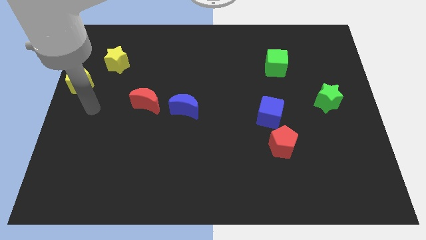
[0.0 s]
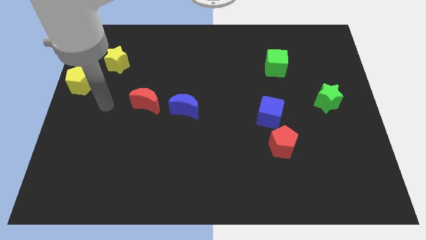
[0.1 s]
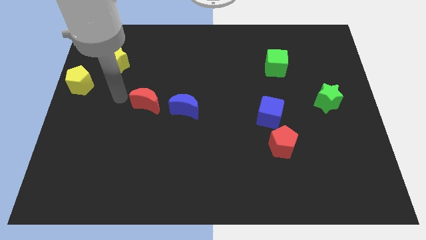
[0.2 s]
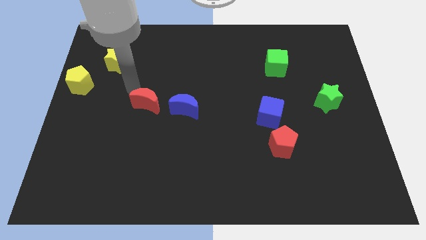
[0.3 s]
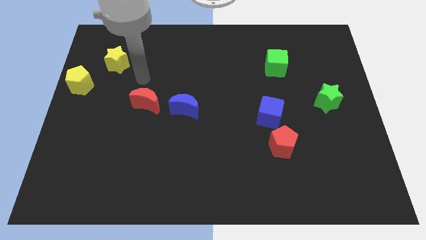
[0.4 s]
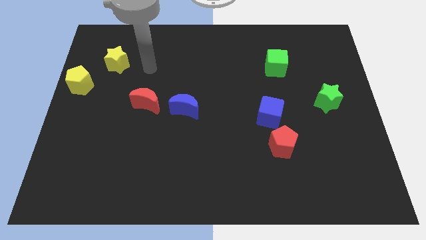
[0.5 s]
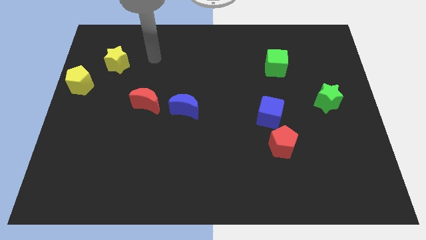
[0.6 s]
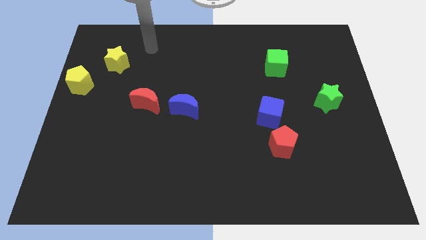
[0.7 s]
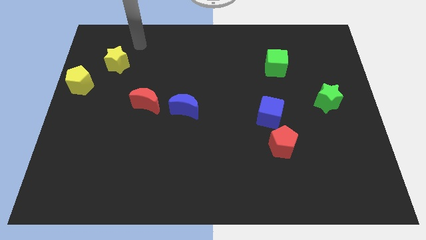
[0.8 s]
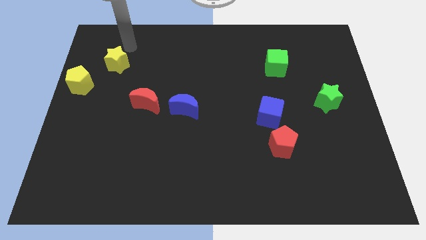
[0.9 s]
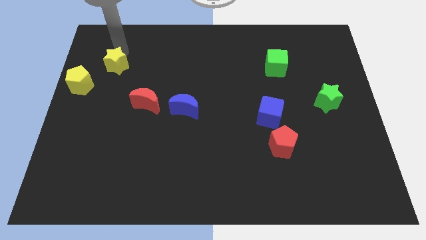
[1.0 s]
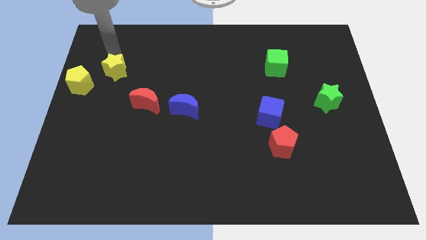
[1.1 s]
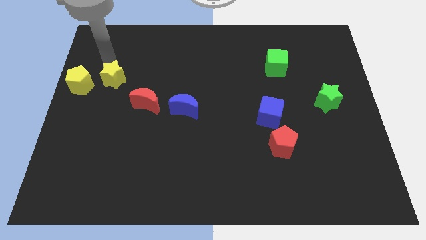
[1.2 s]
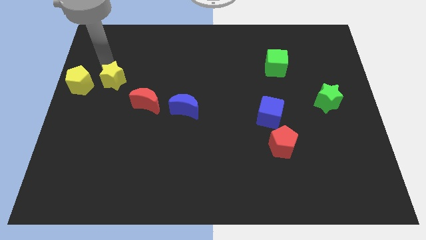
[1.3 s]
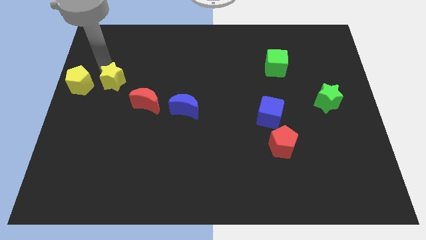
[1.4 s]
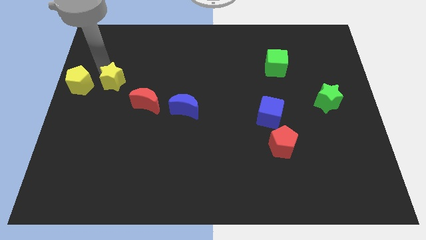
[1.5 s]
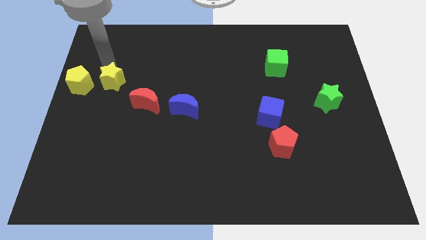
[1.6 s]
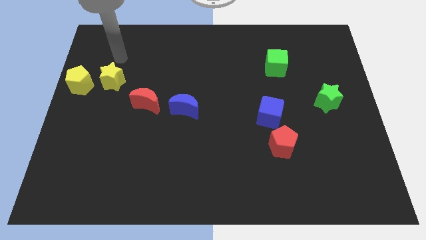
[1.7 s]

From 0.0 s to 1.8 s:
move the yellow star downwards

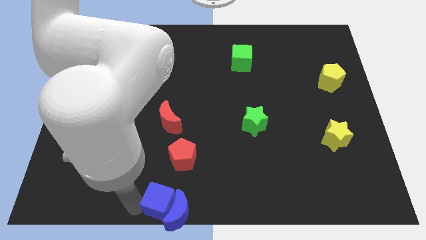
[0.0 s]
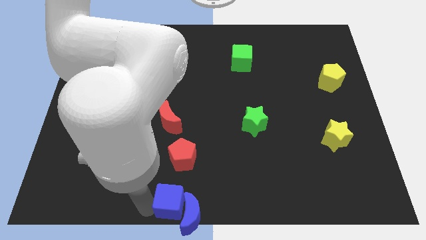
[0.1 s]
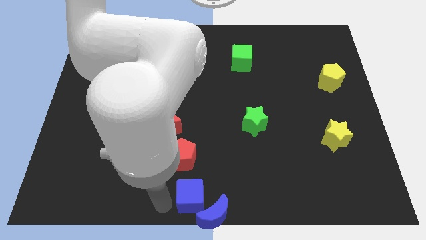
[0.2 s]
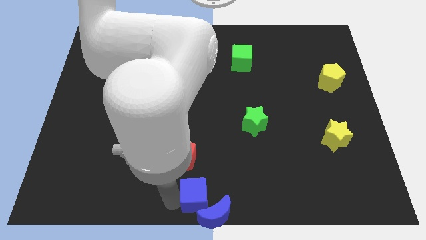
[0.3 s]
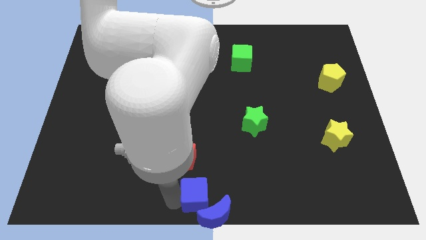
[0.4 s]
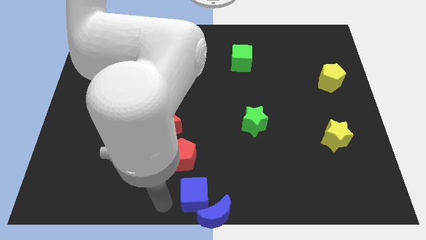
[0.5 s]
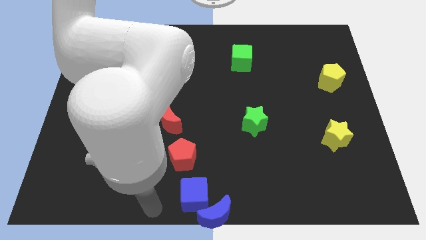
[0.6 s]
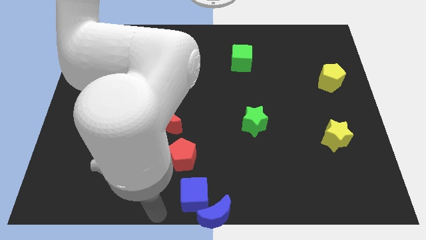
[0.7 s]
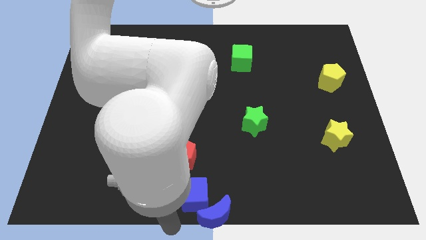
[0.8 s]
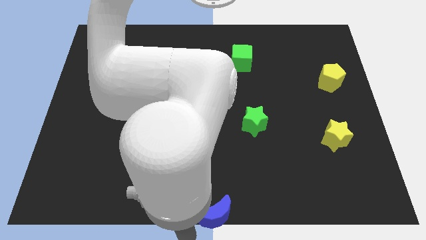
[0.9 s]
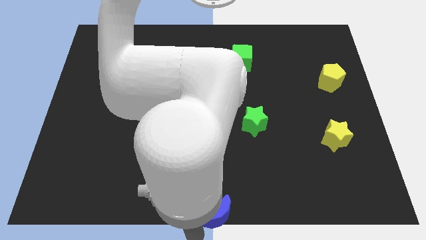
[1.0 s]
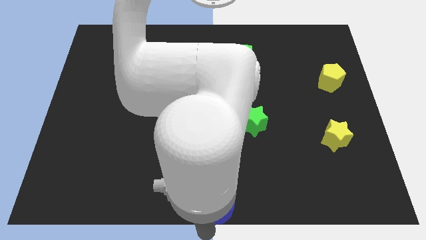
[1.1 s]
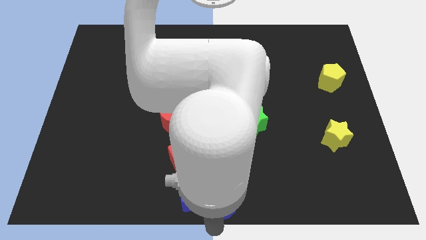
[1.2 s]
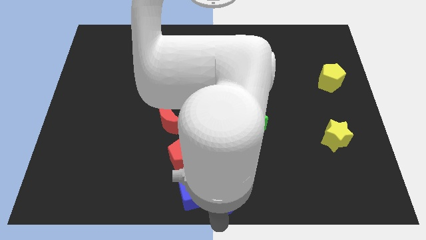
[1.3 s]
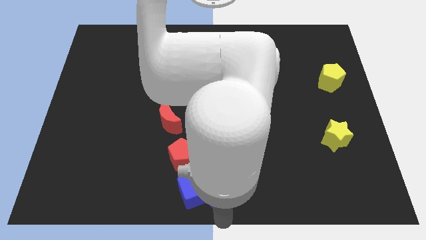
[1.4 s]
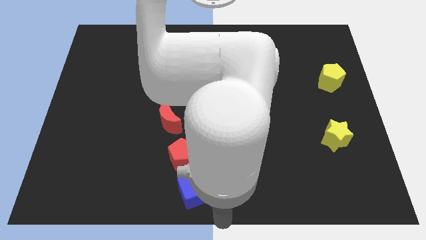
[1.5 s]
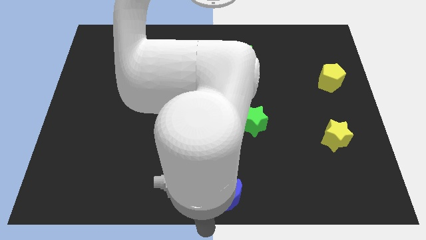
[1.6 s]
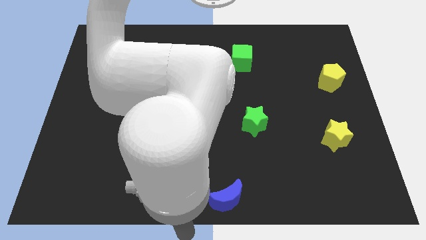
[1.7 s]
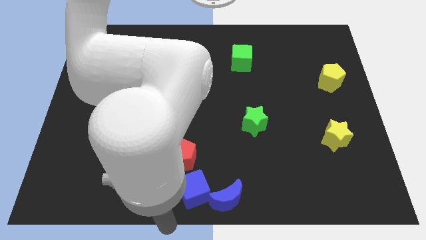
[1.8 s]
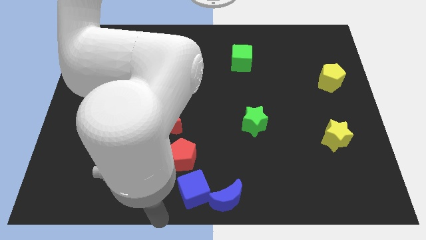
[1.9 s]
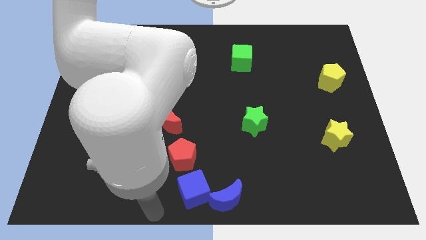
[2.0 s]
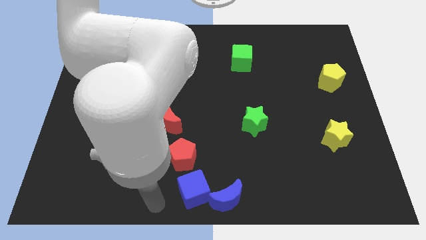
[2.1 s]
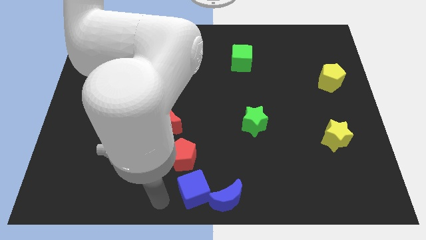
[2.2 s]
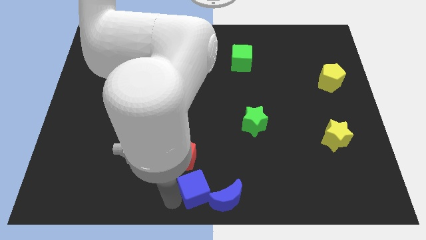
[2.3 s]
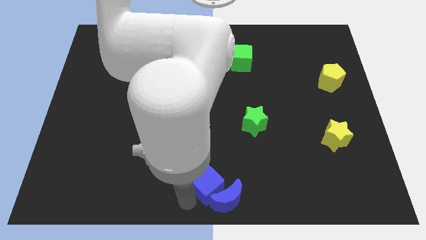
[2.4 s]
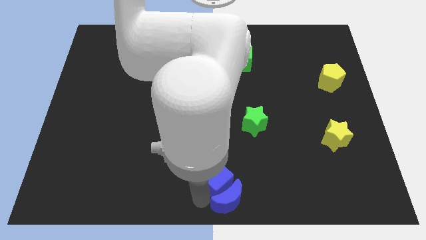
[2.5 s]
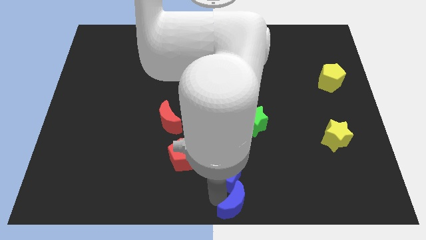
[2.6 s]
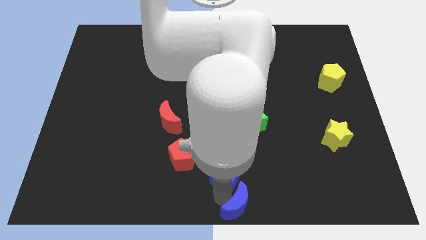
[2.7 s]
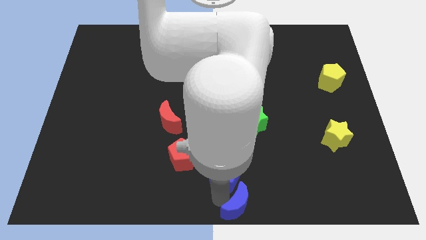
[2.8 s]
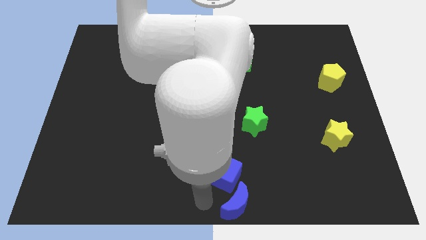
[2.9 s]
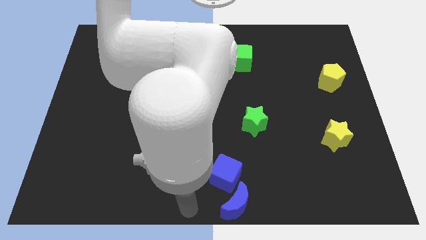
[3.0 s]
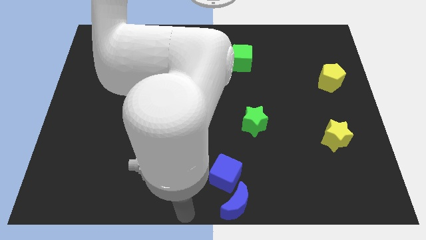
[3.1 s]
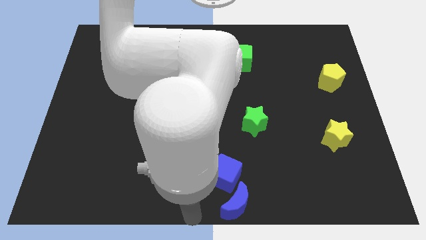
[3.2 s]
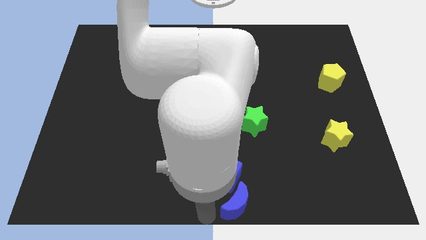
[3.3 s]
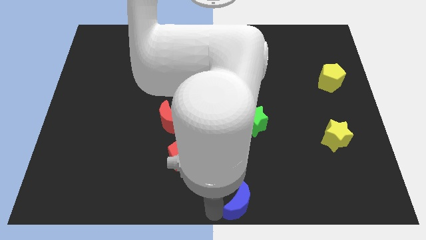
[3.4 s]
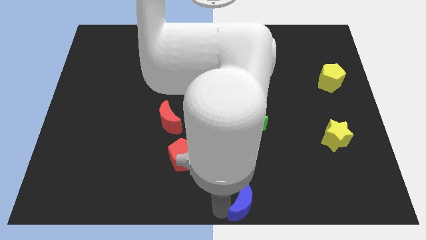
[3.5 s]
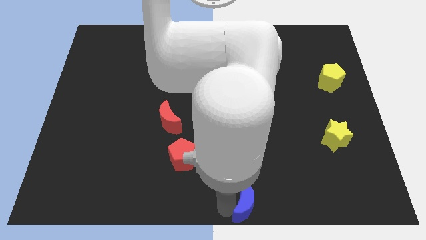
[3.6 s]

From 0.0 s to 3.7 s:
push the blue blocks to the right side

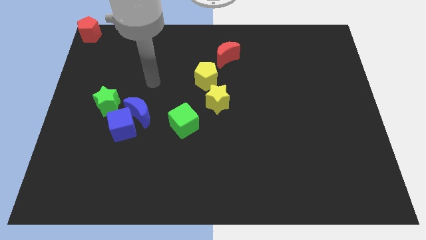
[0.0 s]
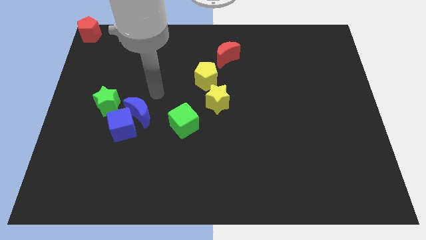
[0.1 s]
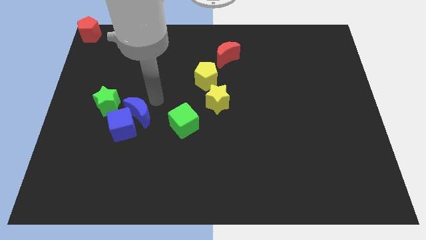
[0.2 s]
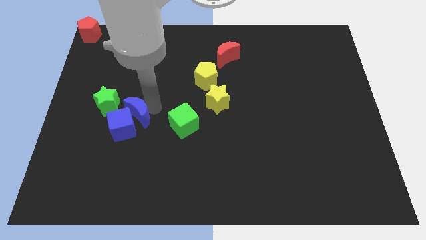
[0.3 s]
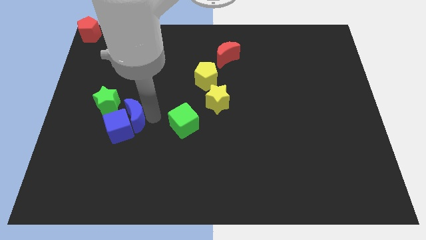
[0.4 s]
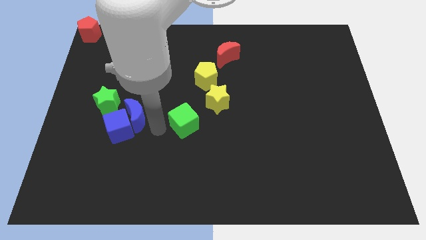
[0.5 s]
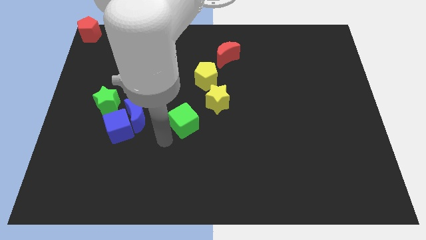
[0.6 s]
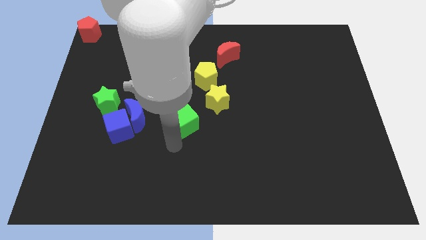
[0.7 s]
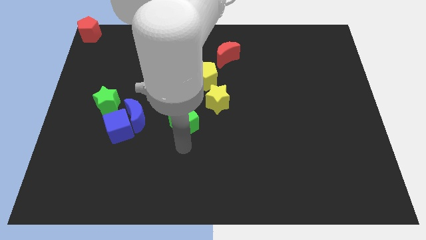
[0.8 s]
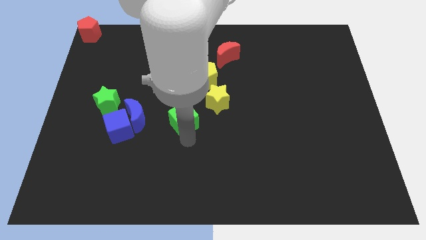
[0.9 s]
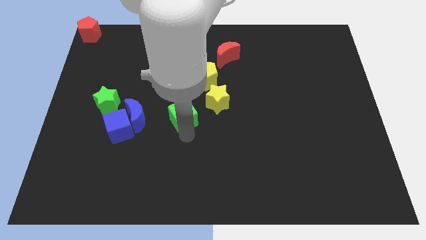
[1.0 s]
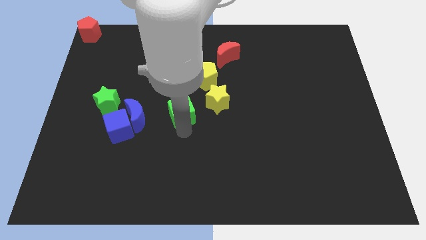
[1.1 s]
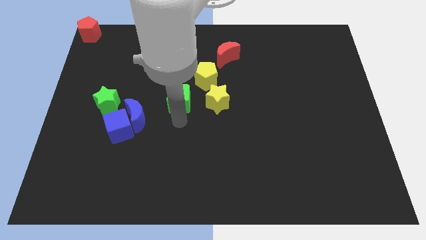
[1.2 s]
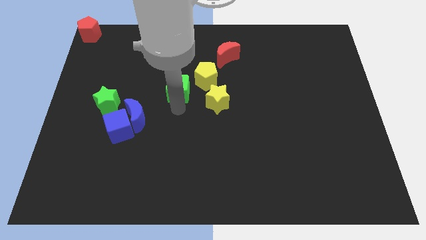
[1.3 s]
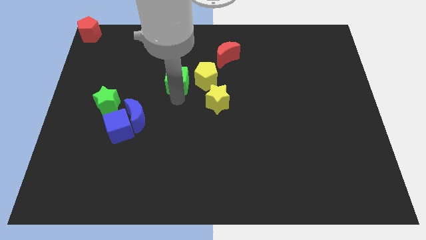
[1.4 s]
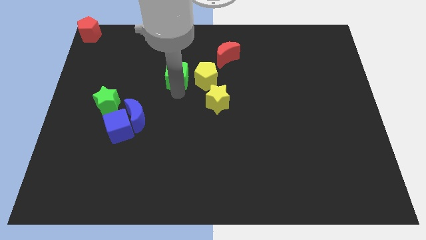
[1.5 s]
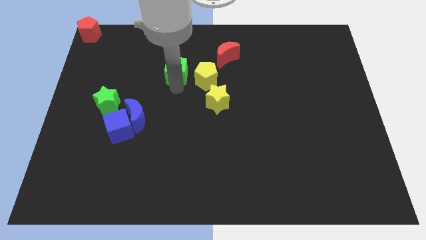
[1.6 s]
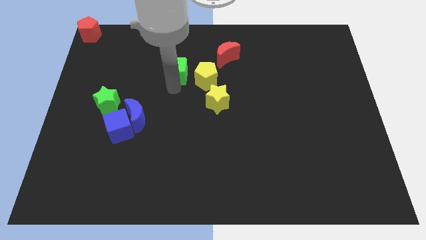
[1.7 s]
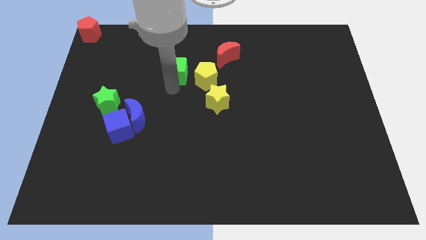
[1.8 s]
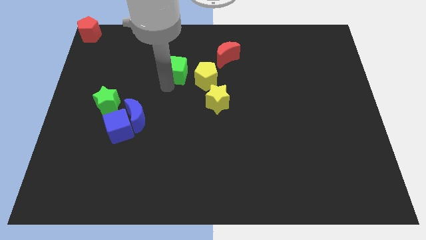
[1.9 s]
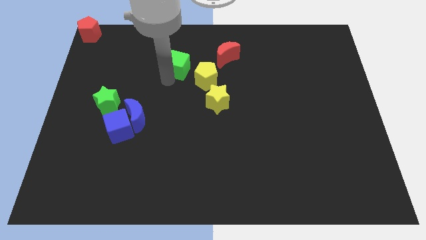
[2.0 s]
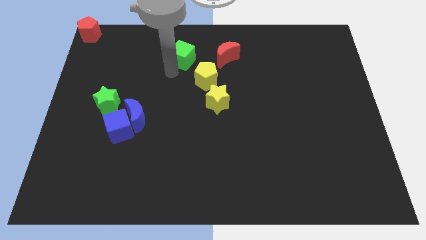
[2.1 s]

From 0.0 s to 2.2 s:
slide the green cube to the left of red moon

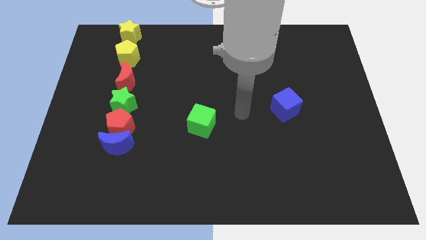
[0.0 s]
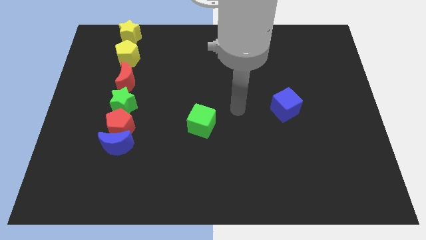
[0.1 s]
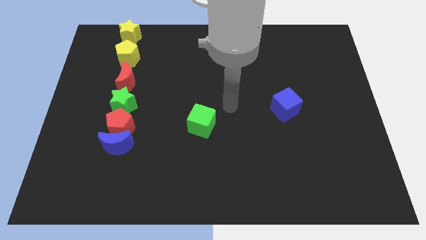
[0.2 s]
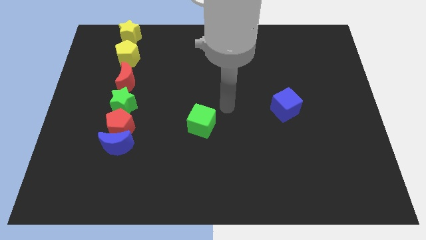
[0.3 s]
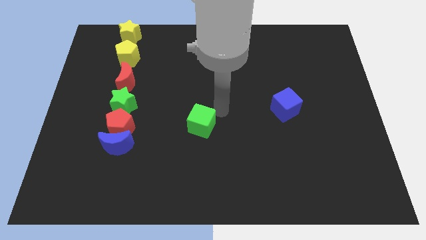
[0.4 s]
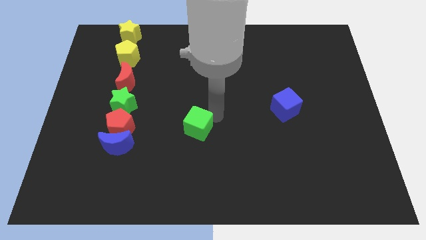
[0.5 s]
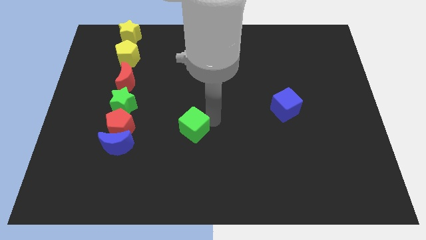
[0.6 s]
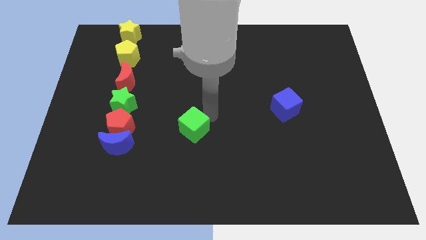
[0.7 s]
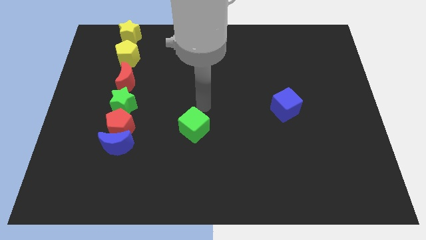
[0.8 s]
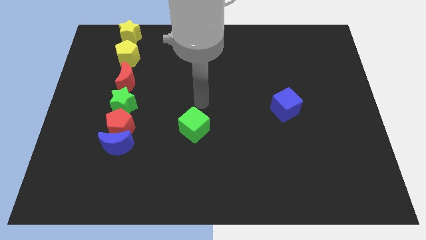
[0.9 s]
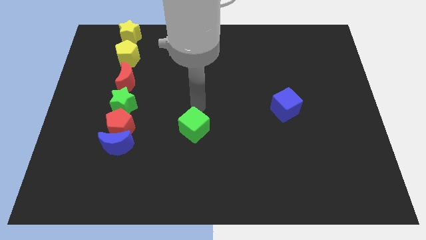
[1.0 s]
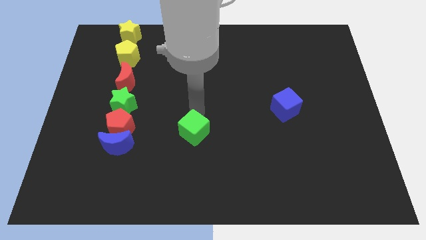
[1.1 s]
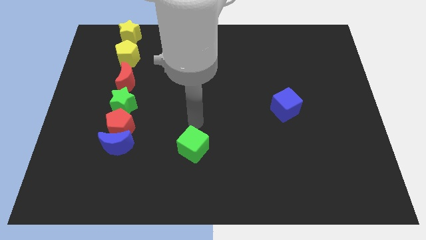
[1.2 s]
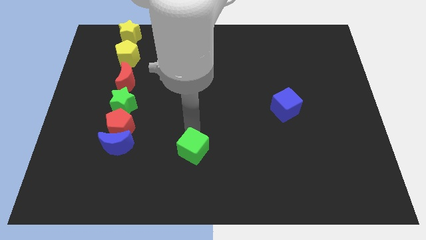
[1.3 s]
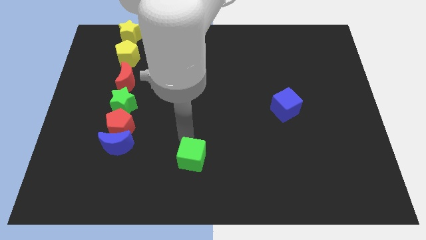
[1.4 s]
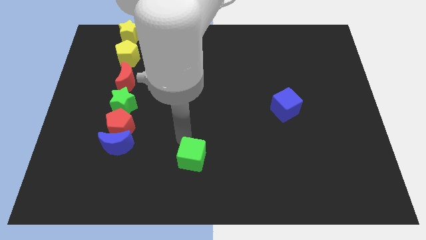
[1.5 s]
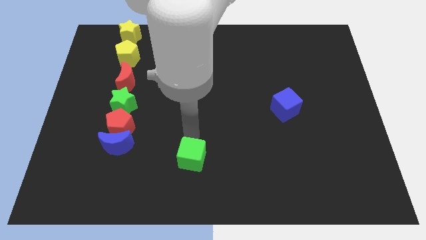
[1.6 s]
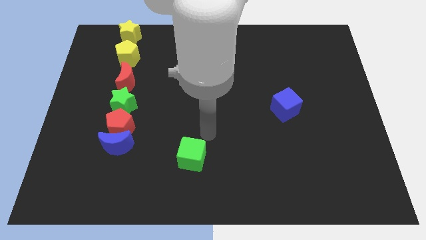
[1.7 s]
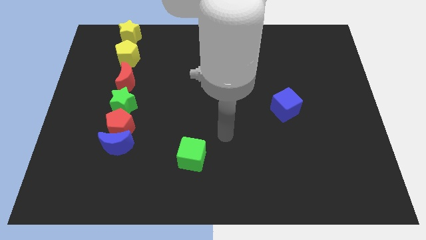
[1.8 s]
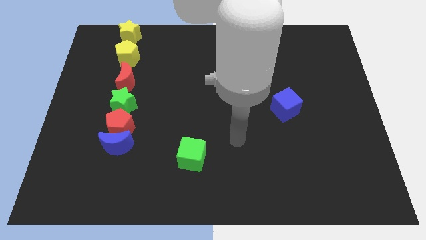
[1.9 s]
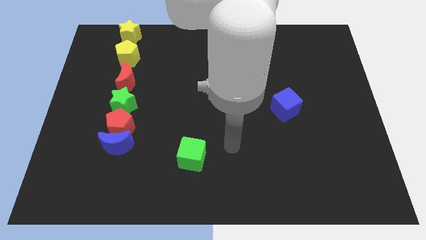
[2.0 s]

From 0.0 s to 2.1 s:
push the green cube downwards
